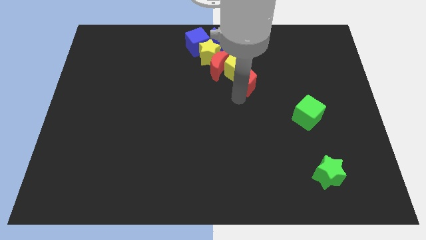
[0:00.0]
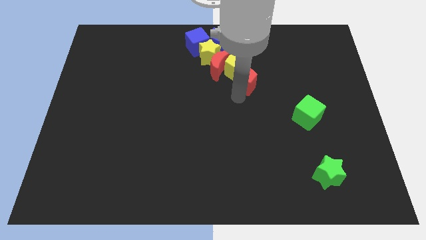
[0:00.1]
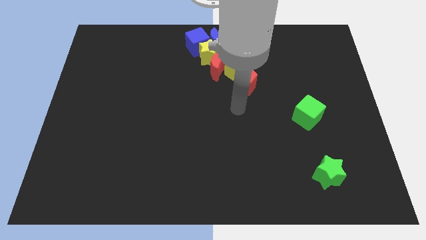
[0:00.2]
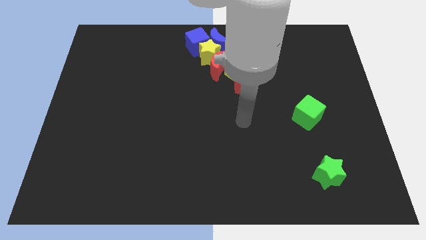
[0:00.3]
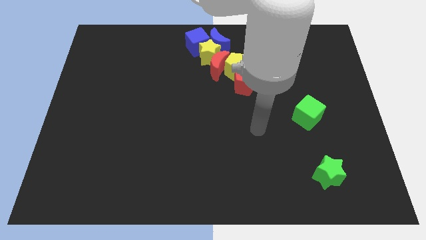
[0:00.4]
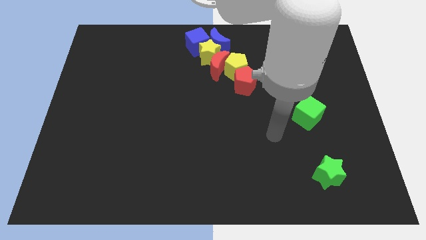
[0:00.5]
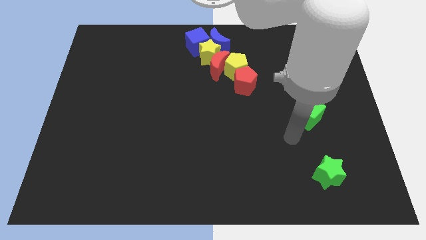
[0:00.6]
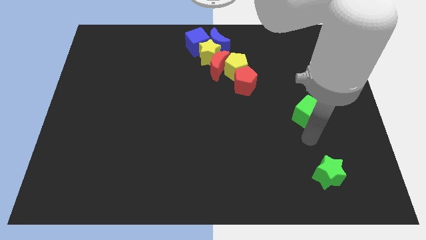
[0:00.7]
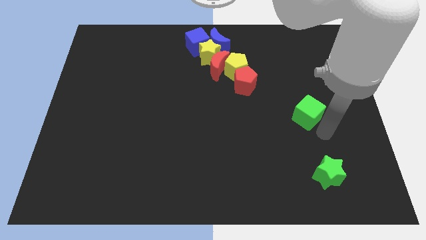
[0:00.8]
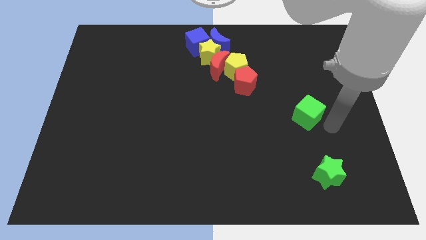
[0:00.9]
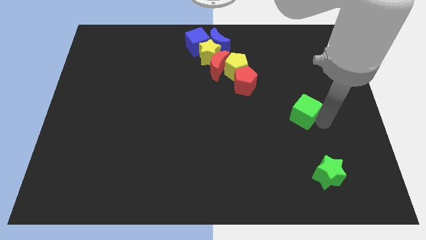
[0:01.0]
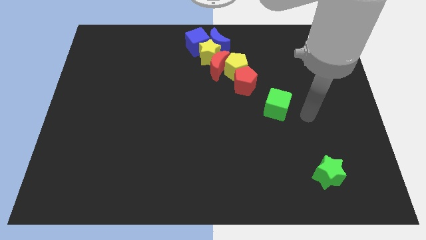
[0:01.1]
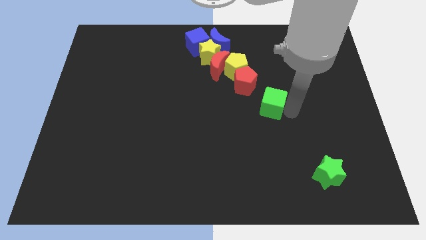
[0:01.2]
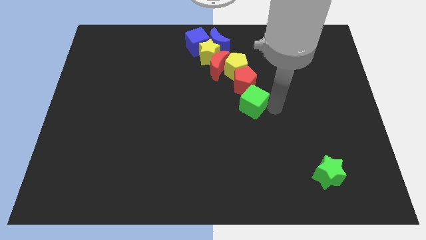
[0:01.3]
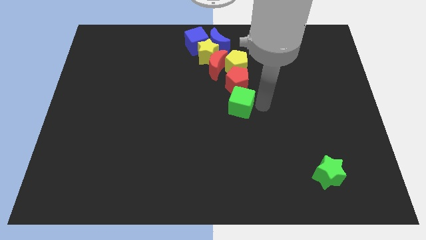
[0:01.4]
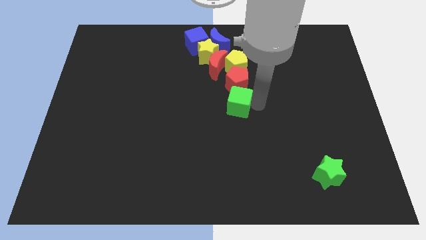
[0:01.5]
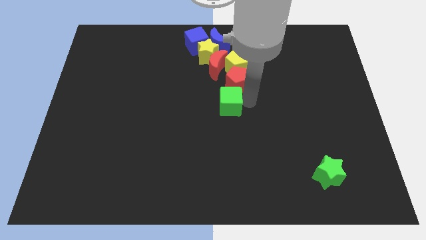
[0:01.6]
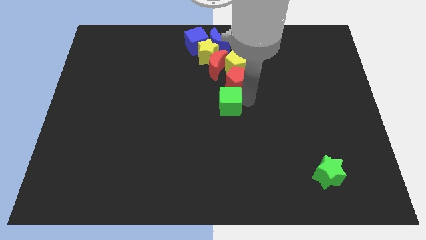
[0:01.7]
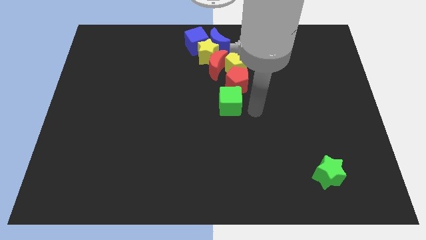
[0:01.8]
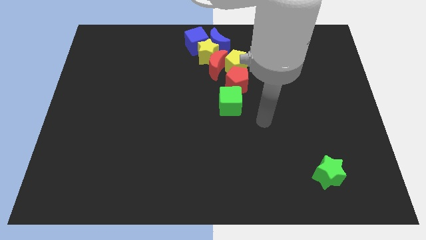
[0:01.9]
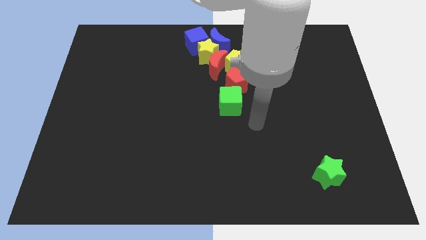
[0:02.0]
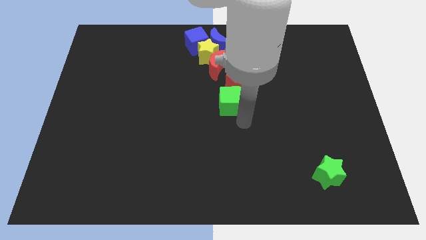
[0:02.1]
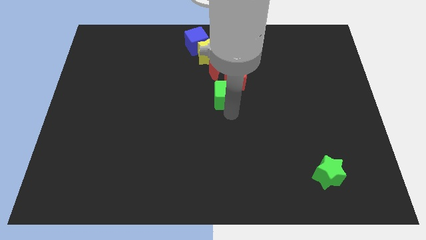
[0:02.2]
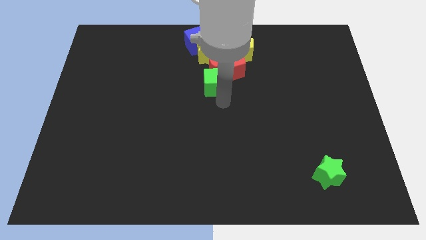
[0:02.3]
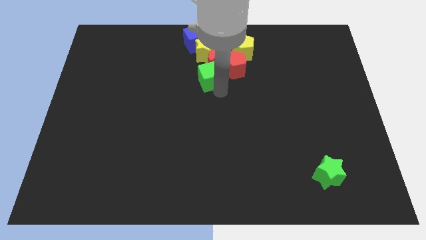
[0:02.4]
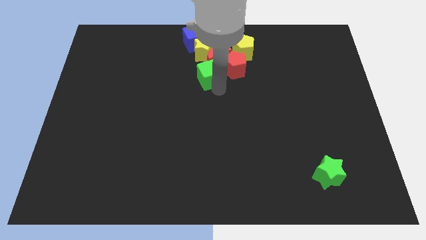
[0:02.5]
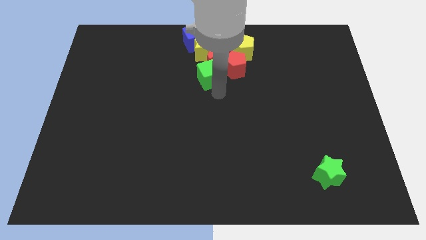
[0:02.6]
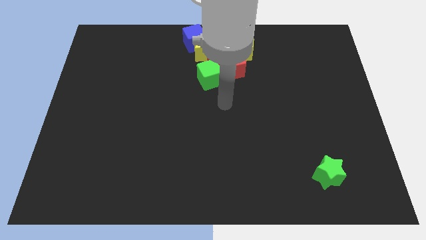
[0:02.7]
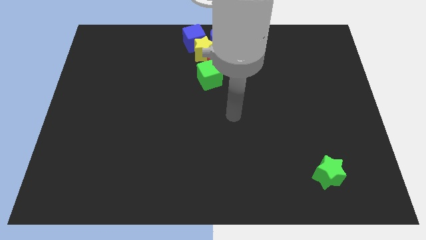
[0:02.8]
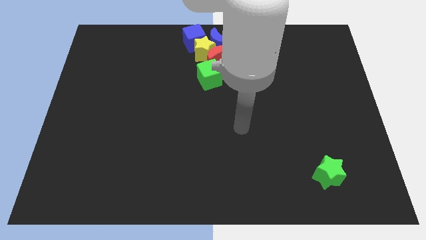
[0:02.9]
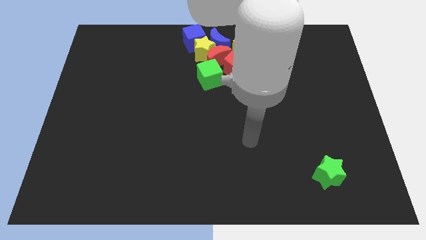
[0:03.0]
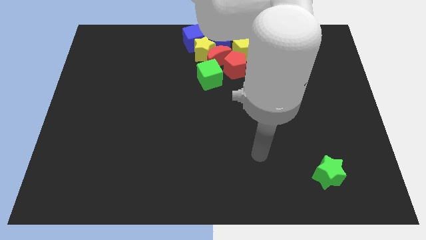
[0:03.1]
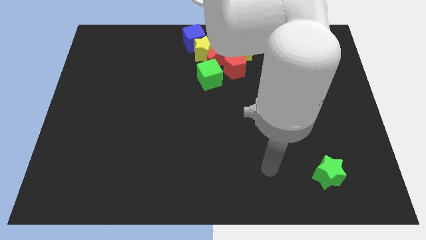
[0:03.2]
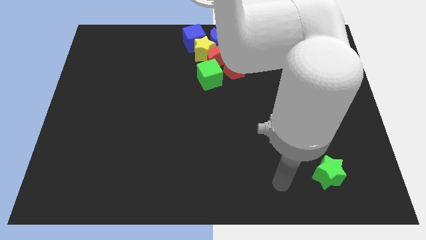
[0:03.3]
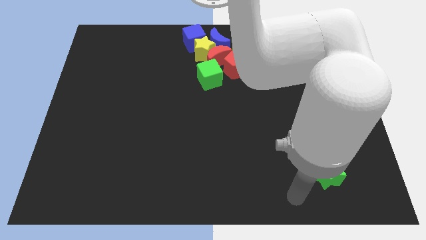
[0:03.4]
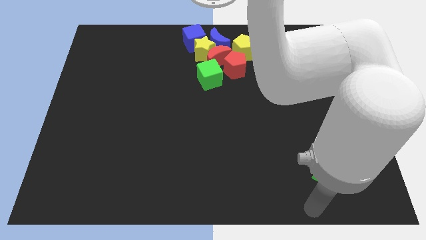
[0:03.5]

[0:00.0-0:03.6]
push the green cube into the red crescent

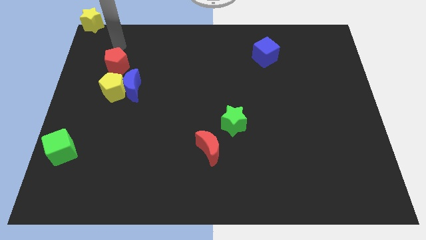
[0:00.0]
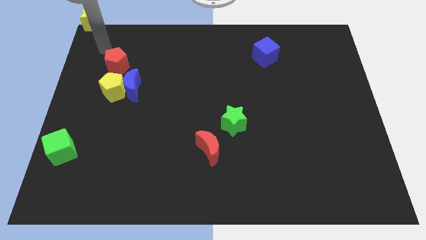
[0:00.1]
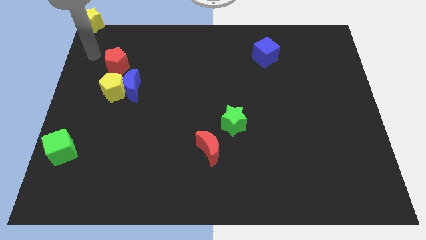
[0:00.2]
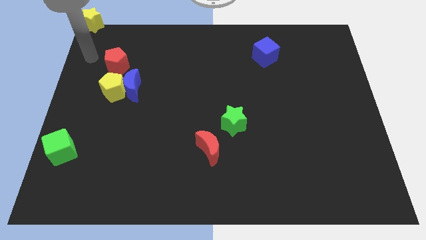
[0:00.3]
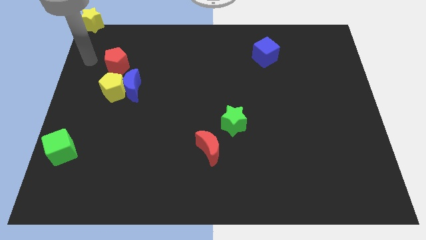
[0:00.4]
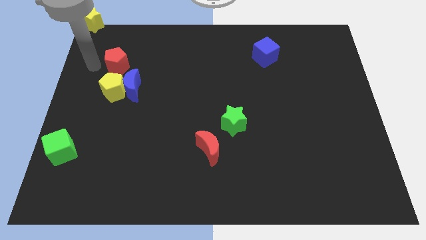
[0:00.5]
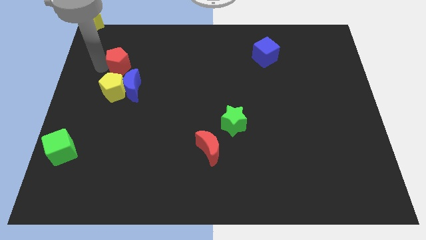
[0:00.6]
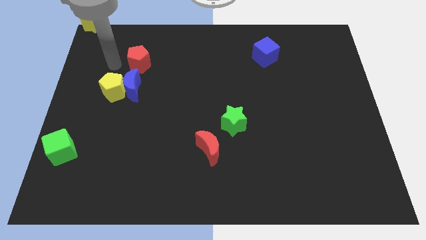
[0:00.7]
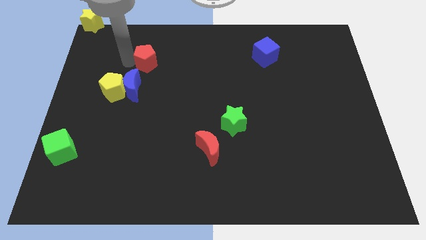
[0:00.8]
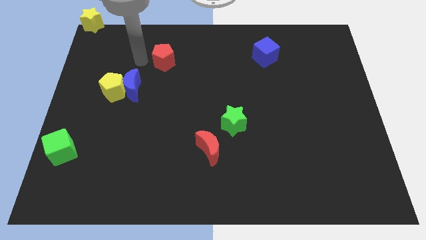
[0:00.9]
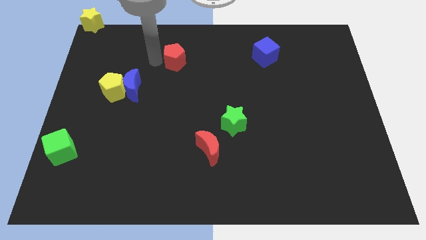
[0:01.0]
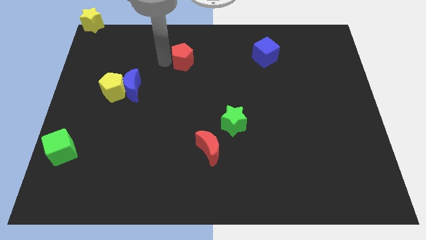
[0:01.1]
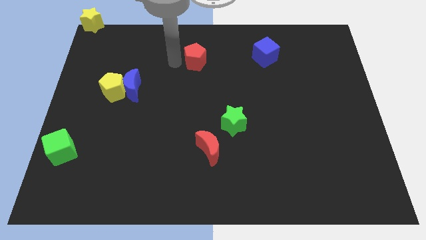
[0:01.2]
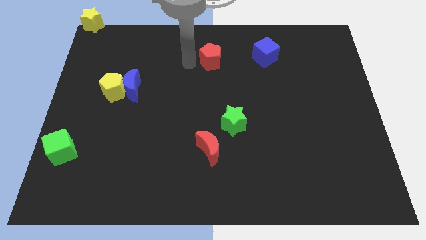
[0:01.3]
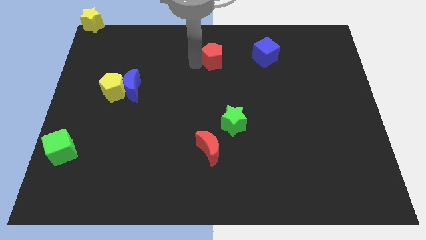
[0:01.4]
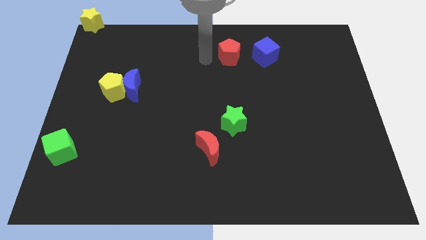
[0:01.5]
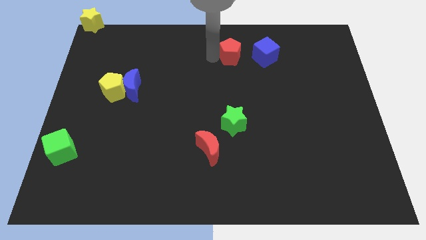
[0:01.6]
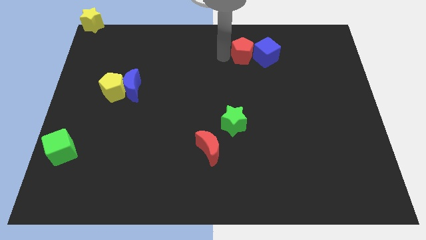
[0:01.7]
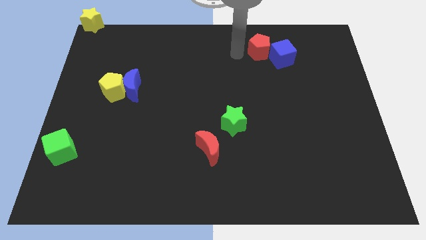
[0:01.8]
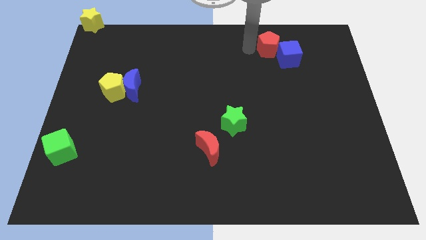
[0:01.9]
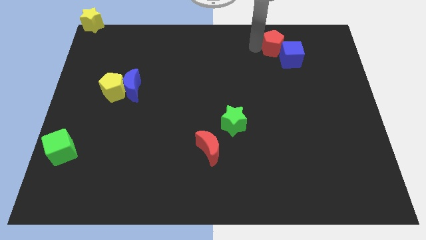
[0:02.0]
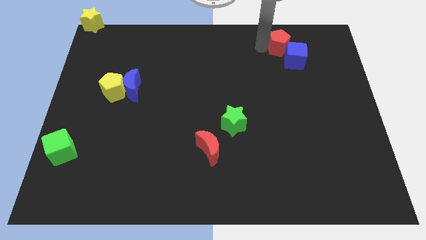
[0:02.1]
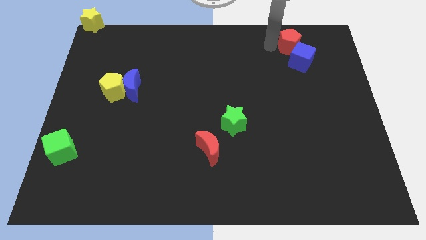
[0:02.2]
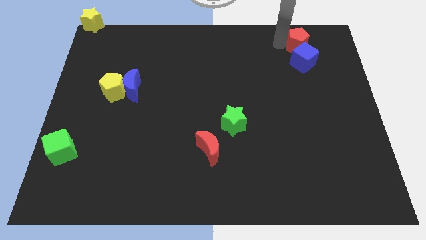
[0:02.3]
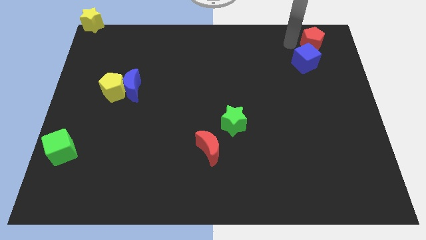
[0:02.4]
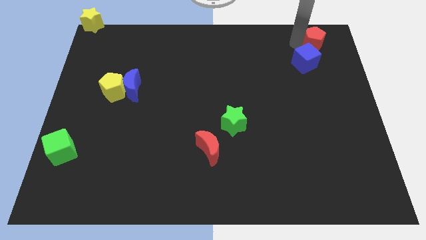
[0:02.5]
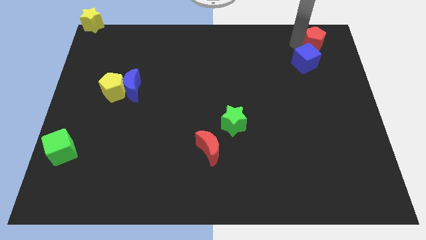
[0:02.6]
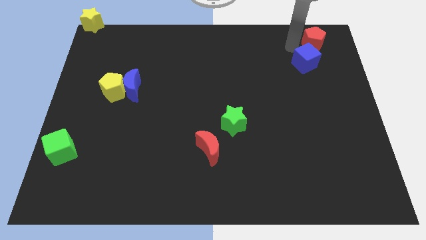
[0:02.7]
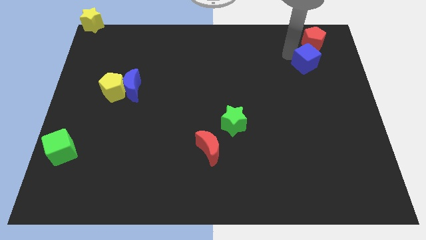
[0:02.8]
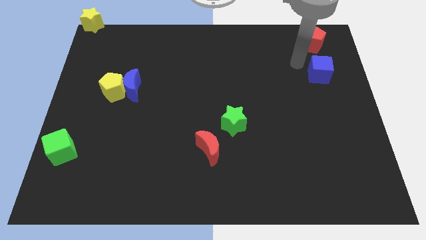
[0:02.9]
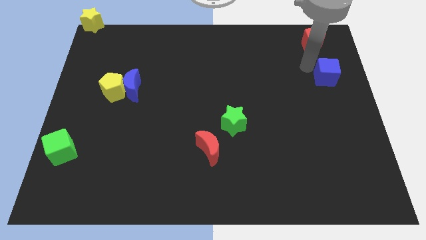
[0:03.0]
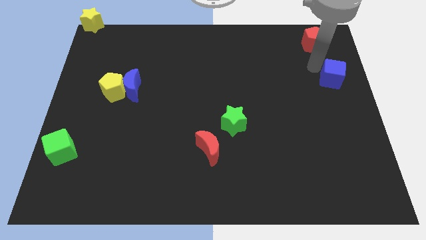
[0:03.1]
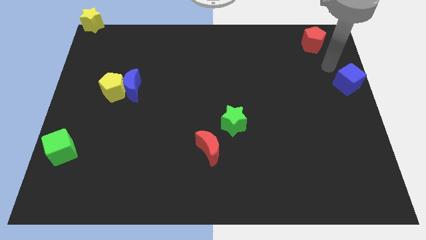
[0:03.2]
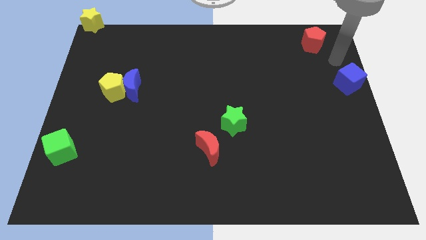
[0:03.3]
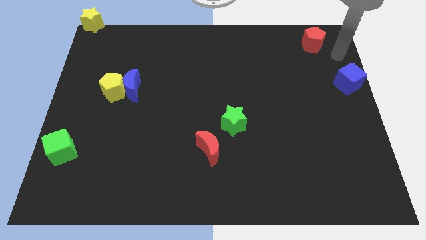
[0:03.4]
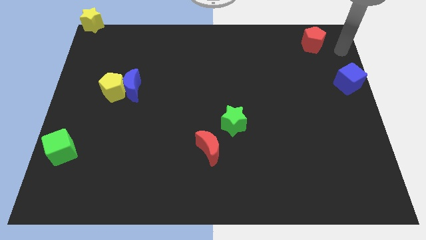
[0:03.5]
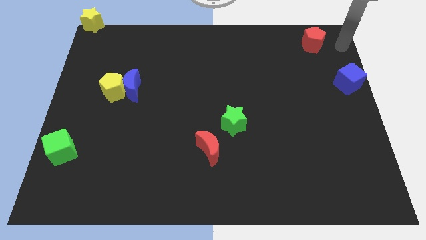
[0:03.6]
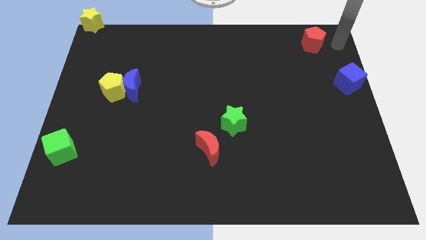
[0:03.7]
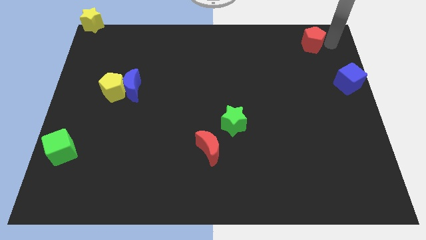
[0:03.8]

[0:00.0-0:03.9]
move the red pentagon to the top right of the board

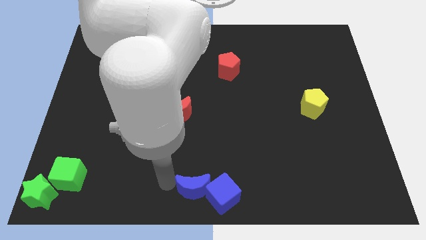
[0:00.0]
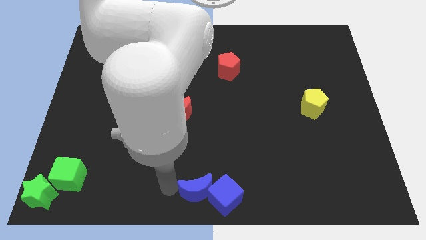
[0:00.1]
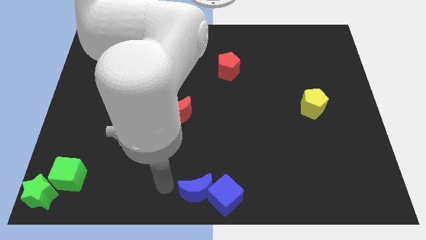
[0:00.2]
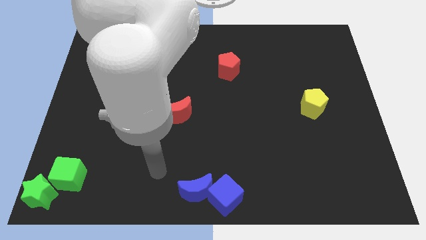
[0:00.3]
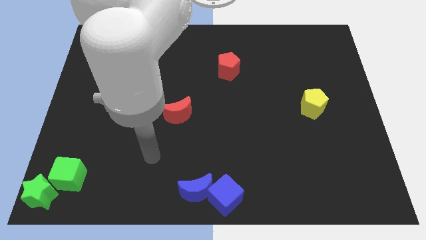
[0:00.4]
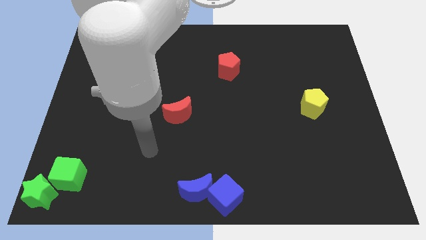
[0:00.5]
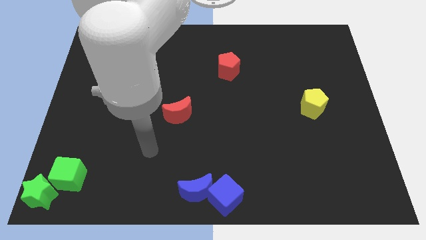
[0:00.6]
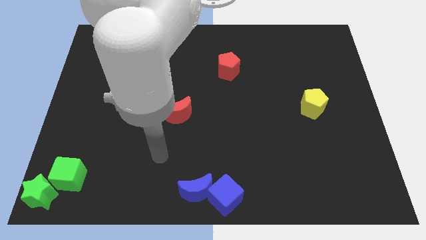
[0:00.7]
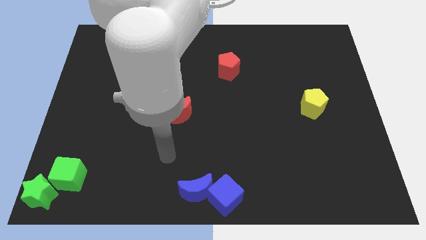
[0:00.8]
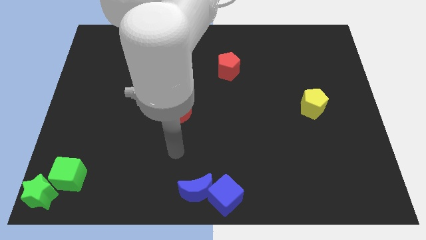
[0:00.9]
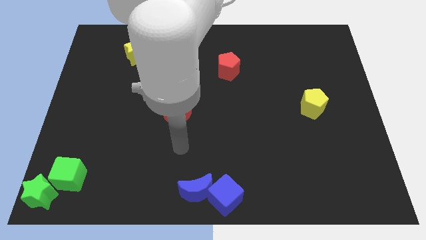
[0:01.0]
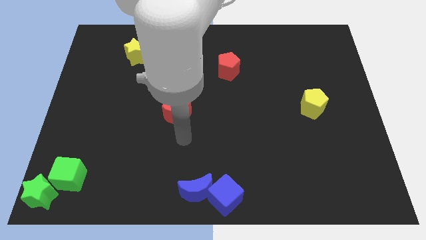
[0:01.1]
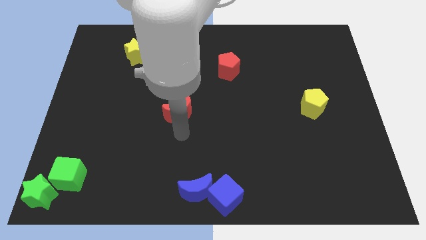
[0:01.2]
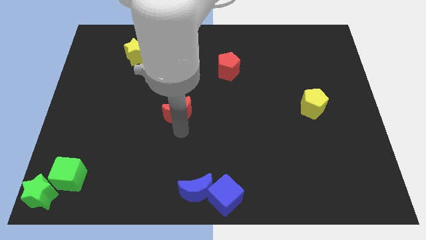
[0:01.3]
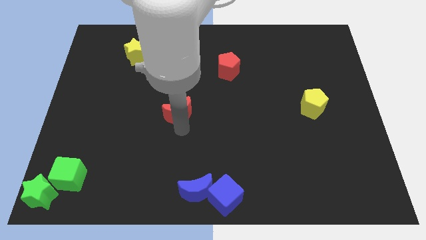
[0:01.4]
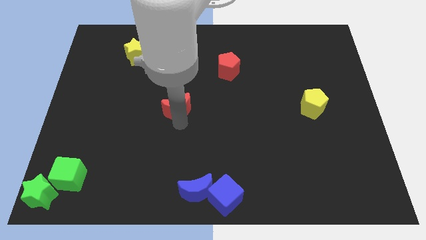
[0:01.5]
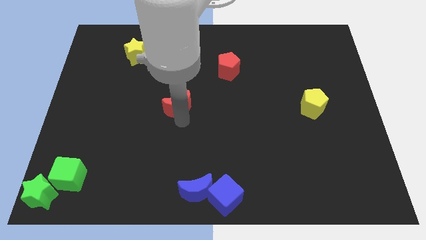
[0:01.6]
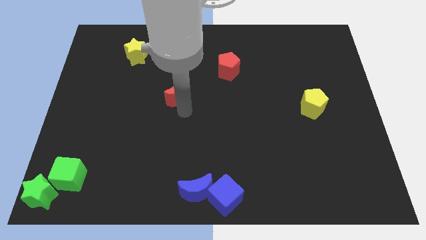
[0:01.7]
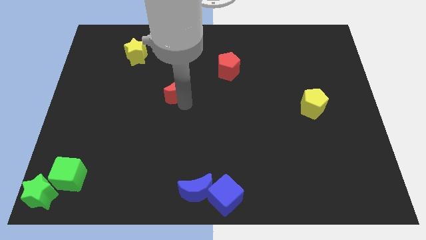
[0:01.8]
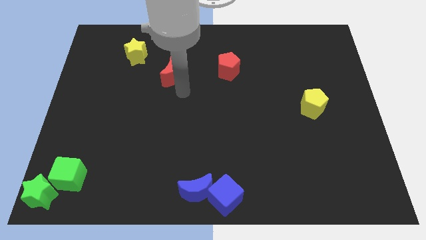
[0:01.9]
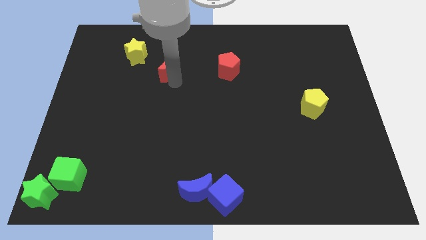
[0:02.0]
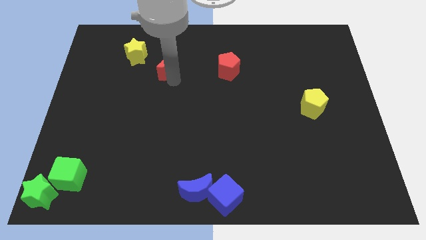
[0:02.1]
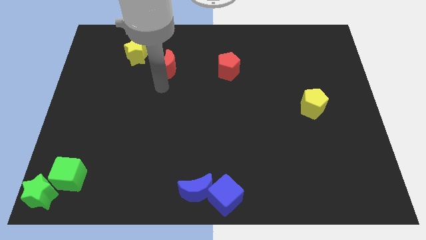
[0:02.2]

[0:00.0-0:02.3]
place the red moon between red pentagon and yellow star
